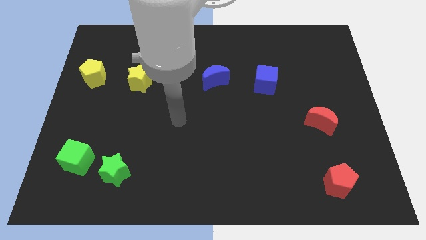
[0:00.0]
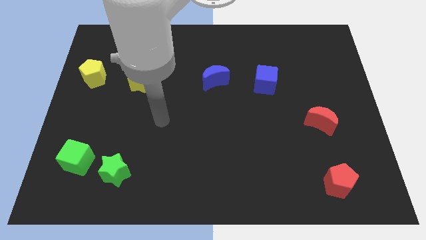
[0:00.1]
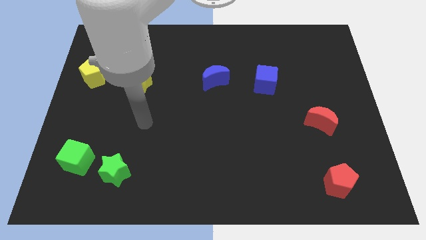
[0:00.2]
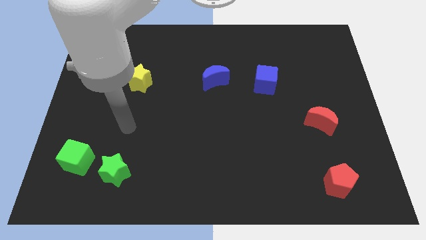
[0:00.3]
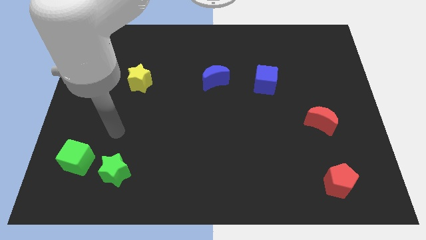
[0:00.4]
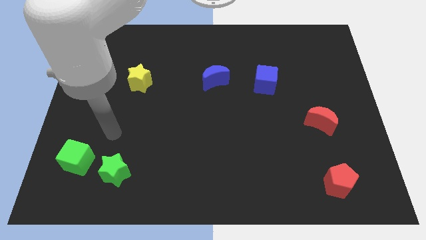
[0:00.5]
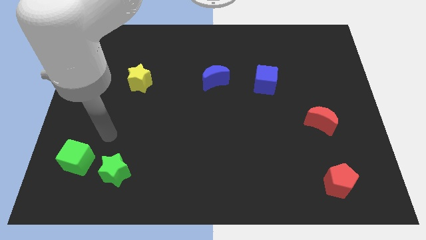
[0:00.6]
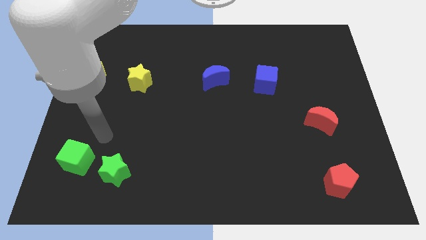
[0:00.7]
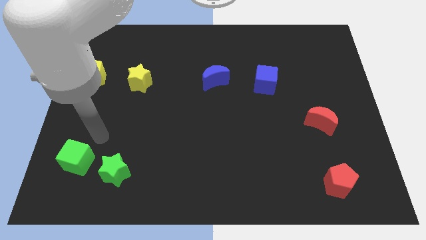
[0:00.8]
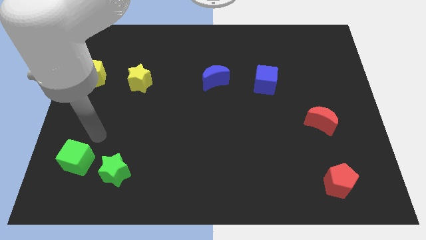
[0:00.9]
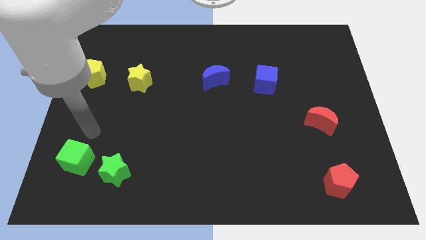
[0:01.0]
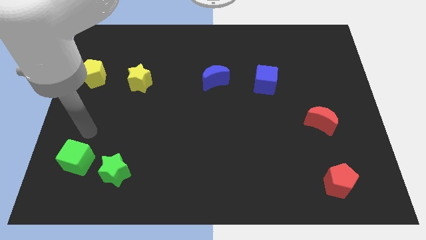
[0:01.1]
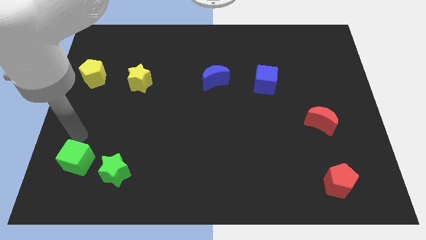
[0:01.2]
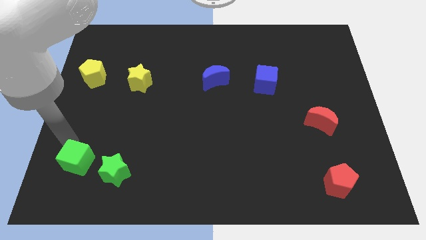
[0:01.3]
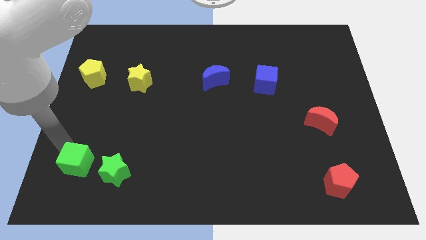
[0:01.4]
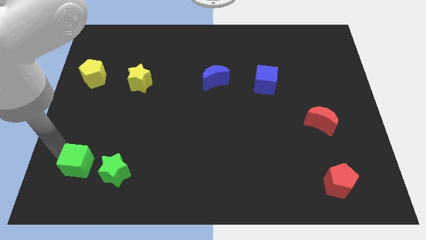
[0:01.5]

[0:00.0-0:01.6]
place your arm to the left top of the green cube

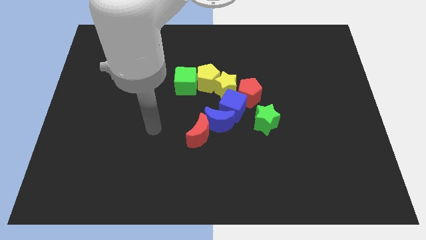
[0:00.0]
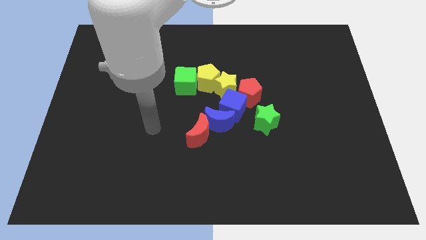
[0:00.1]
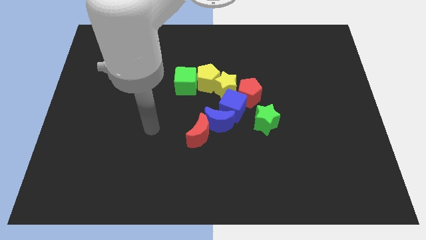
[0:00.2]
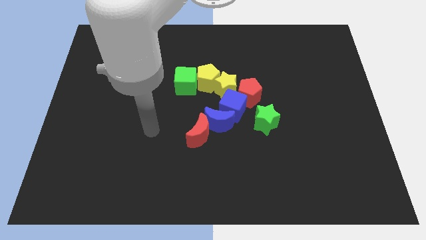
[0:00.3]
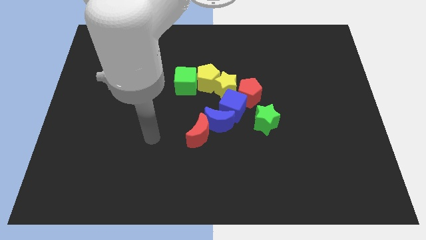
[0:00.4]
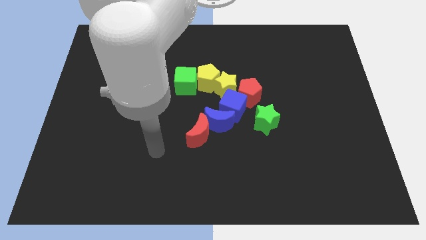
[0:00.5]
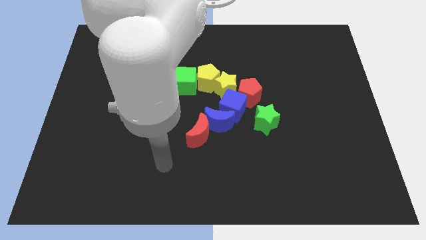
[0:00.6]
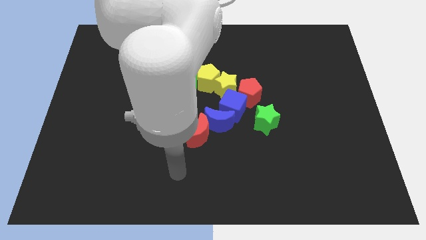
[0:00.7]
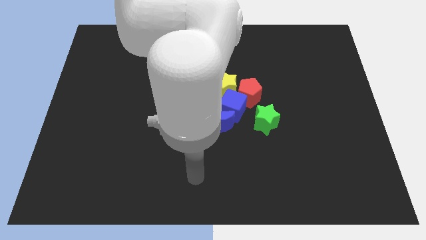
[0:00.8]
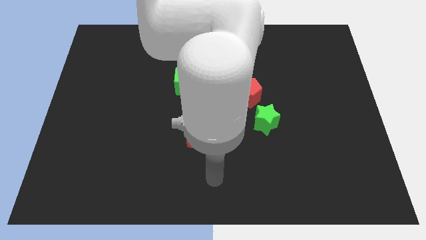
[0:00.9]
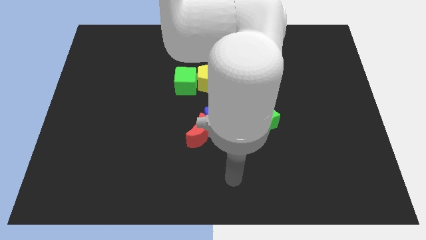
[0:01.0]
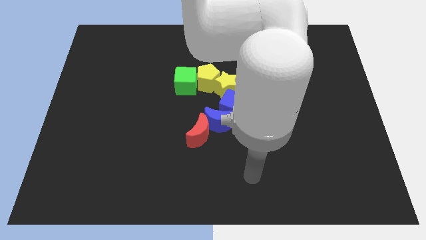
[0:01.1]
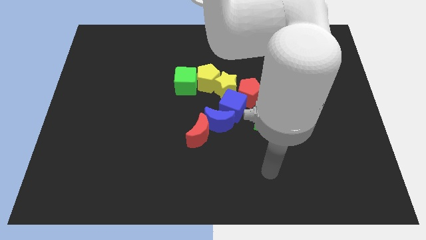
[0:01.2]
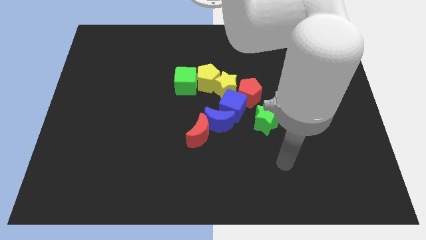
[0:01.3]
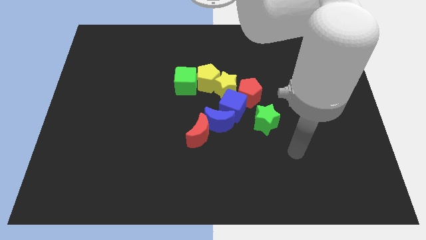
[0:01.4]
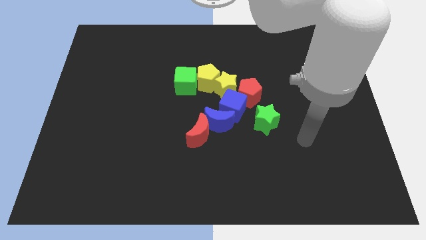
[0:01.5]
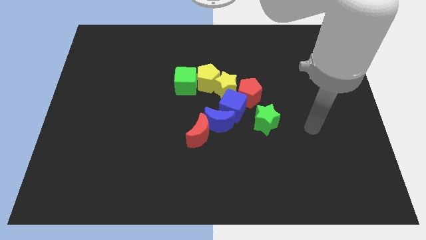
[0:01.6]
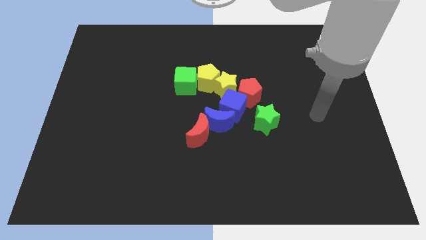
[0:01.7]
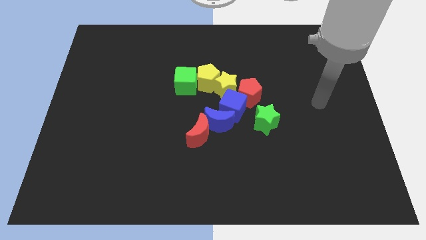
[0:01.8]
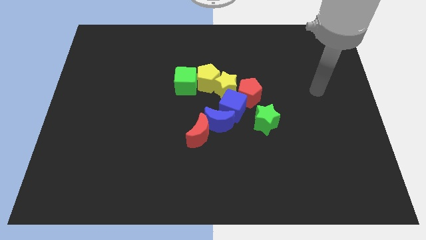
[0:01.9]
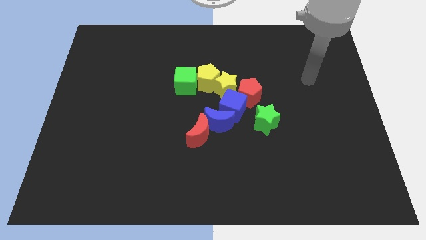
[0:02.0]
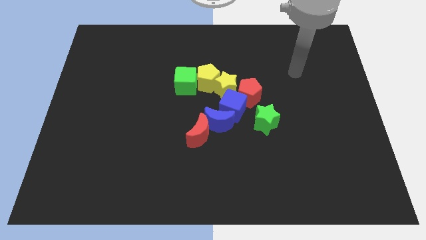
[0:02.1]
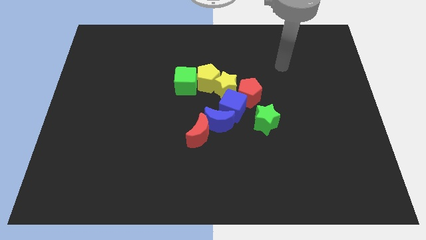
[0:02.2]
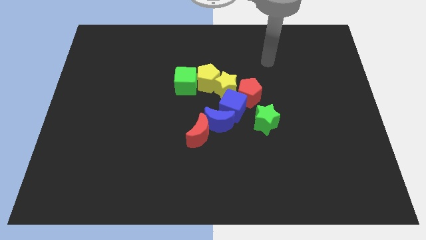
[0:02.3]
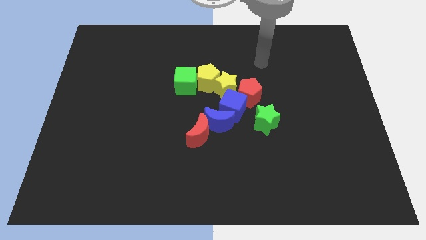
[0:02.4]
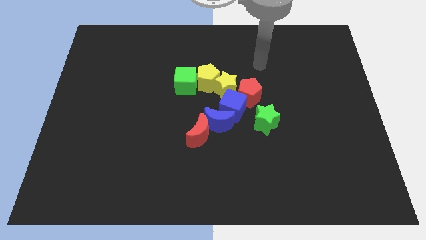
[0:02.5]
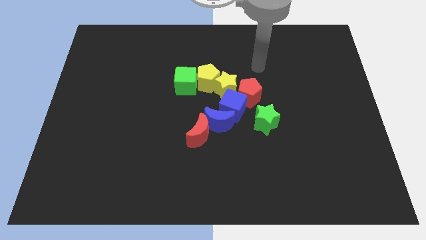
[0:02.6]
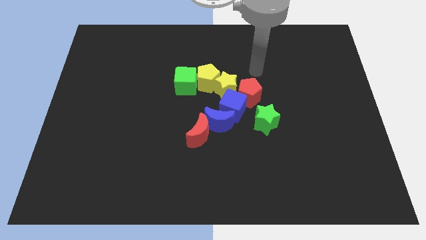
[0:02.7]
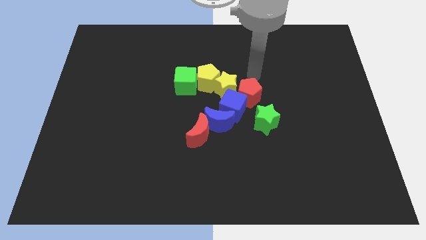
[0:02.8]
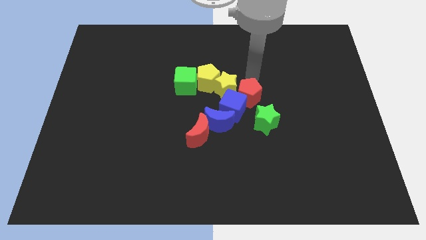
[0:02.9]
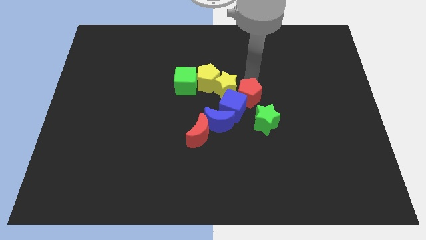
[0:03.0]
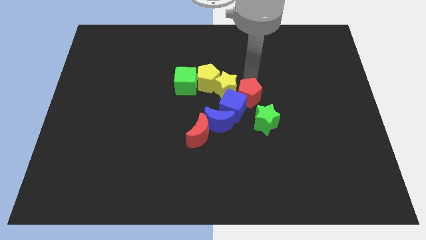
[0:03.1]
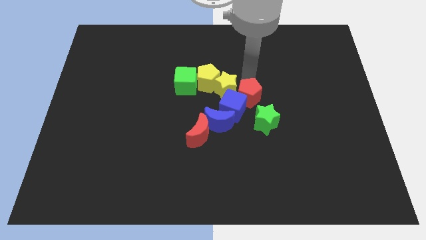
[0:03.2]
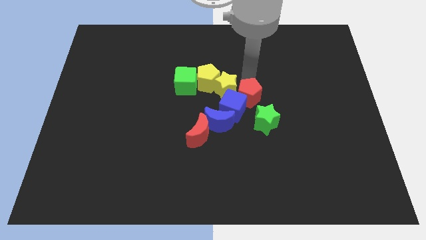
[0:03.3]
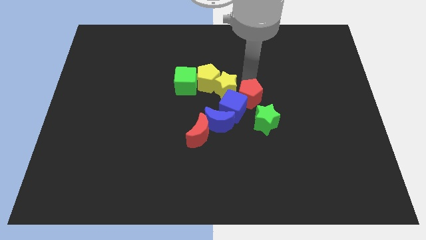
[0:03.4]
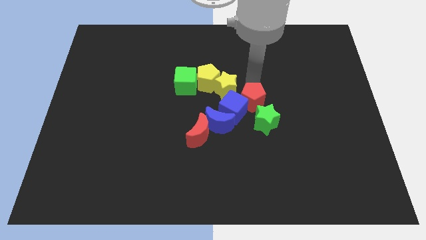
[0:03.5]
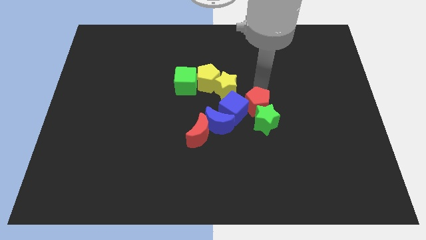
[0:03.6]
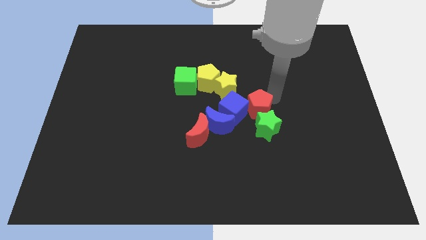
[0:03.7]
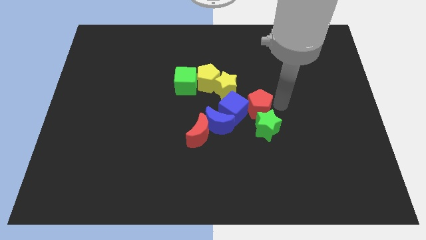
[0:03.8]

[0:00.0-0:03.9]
move the arm towards the red pentagon

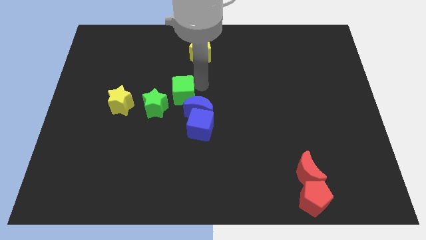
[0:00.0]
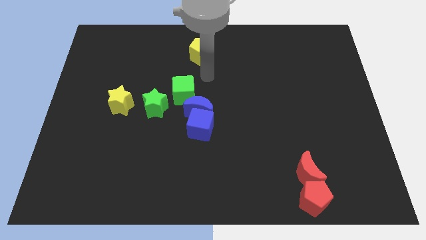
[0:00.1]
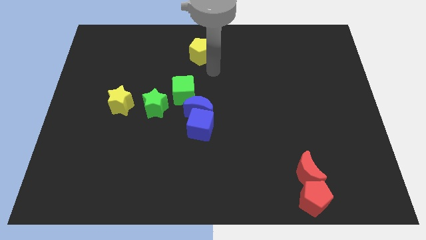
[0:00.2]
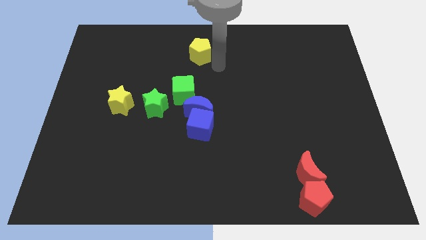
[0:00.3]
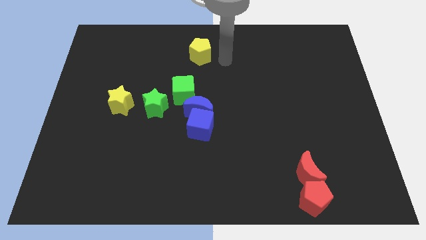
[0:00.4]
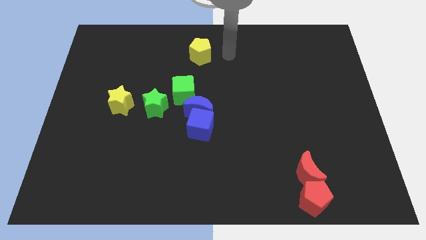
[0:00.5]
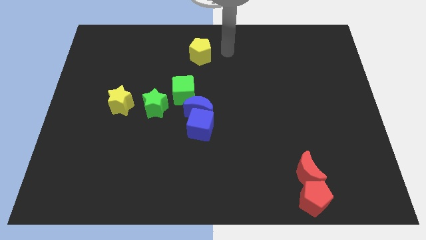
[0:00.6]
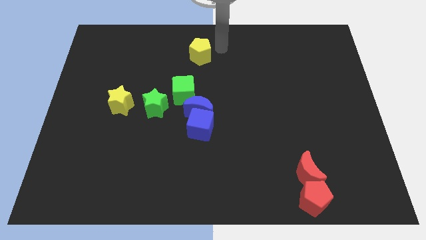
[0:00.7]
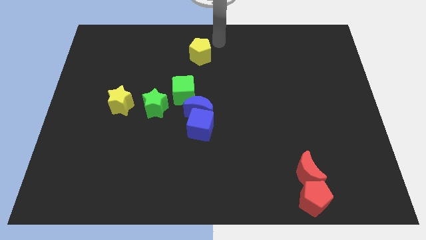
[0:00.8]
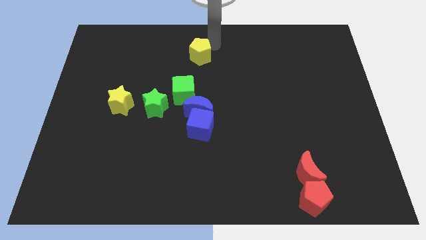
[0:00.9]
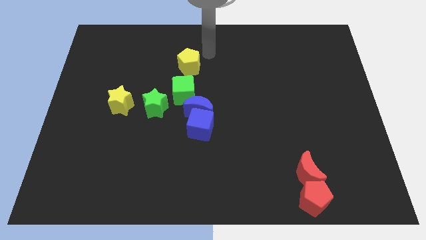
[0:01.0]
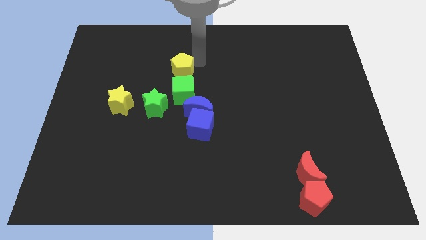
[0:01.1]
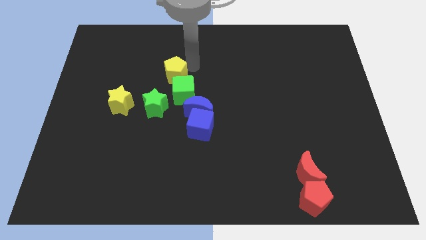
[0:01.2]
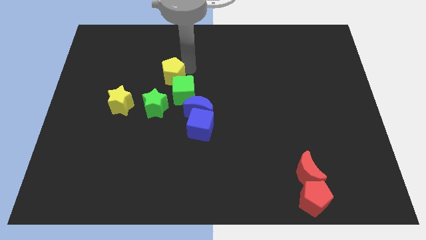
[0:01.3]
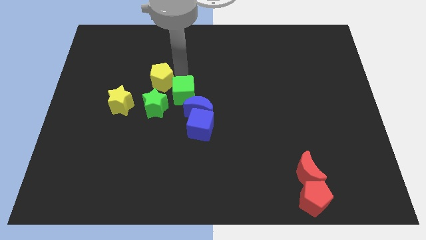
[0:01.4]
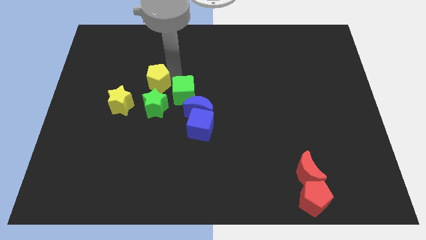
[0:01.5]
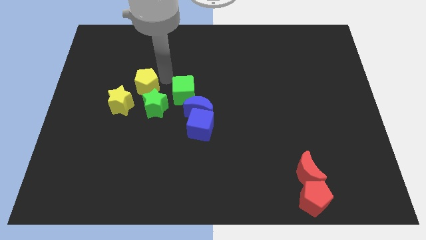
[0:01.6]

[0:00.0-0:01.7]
bring the yellow pentagon at the top side of the green star

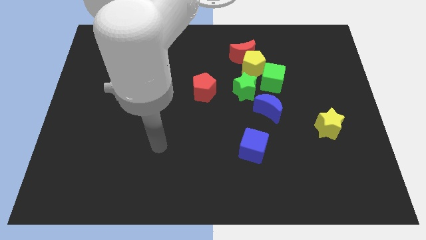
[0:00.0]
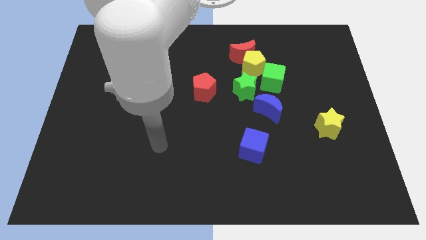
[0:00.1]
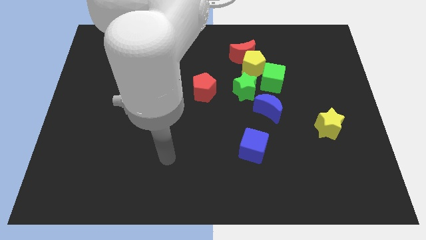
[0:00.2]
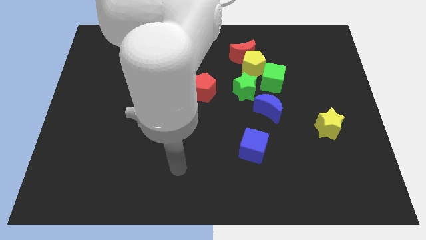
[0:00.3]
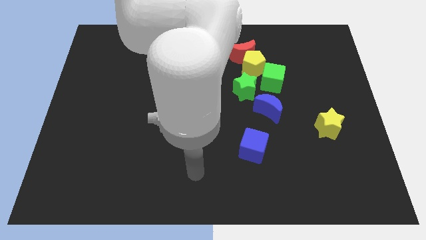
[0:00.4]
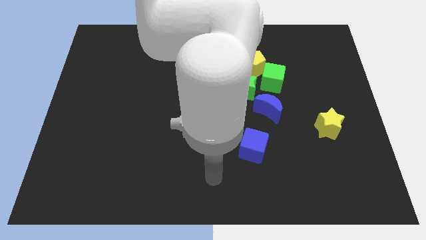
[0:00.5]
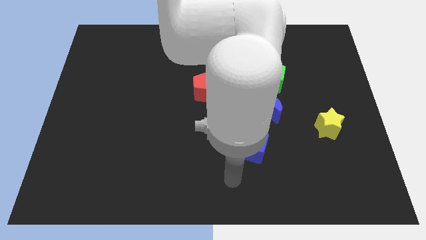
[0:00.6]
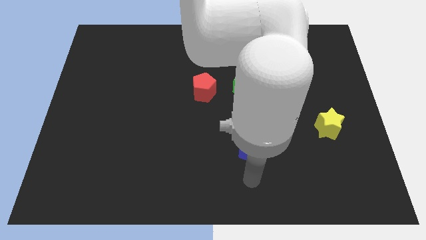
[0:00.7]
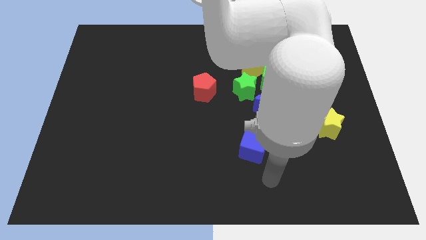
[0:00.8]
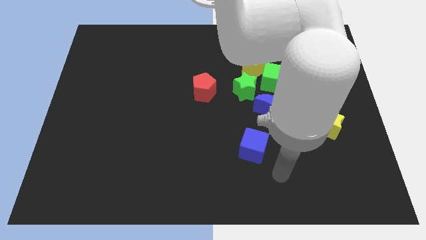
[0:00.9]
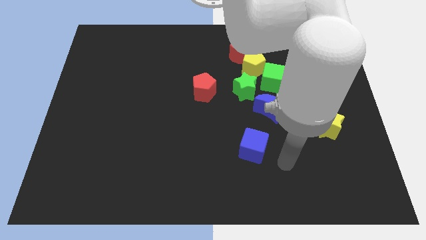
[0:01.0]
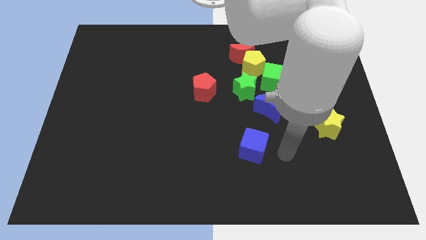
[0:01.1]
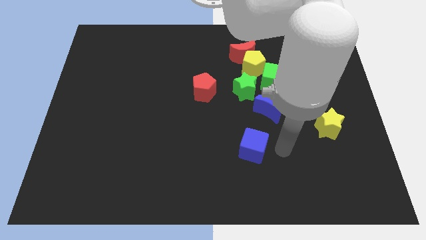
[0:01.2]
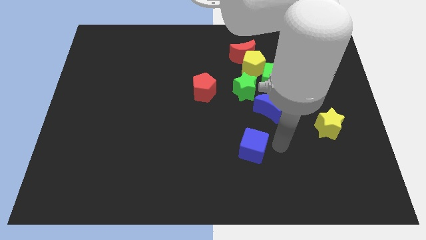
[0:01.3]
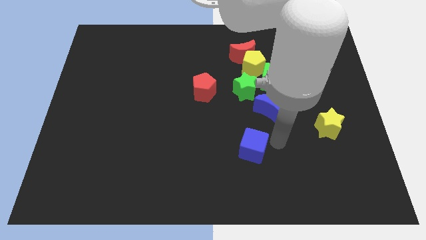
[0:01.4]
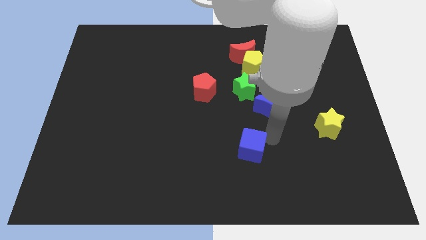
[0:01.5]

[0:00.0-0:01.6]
place arm at the top right side of blue cube

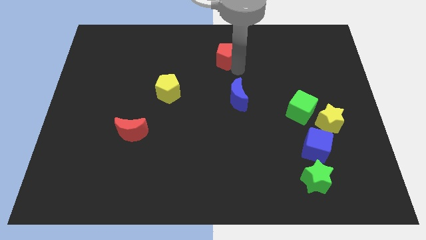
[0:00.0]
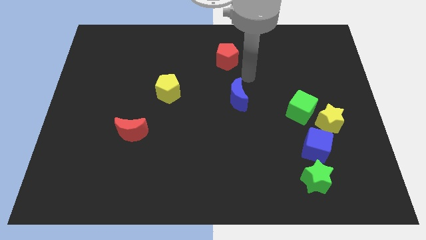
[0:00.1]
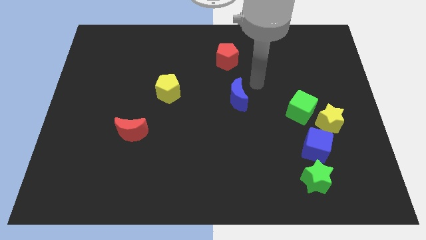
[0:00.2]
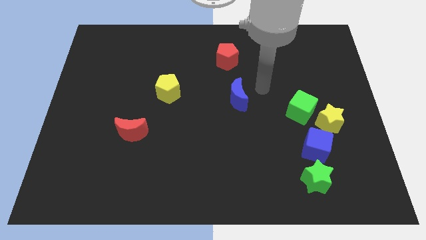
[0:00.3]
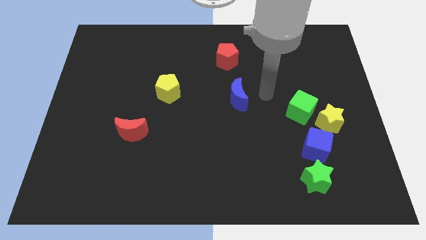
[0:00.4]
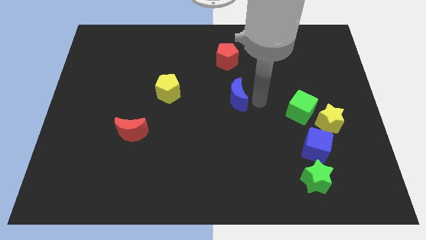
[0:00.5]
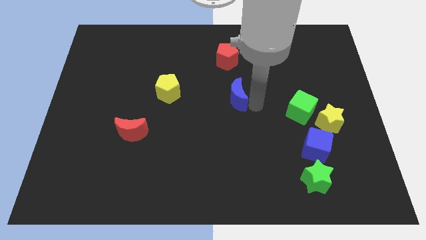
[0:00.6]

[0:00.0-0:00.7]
move your arm towards the blue moon
